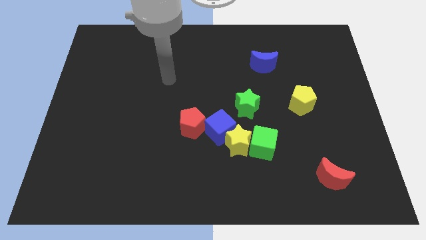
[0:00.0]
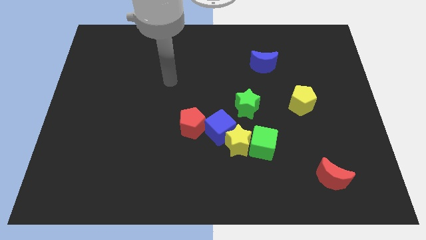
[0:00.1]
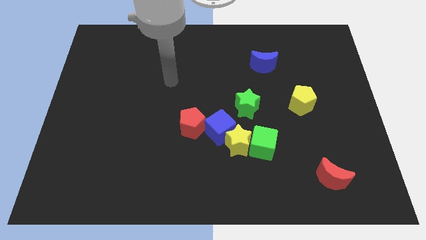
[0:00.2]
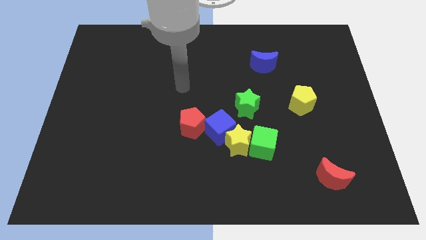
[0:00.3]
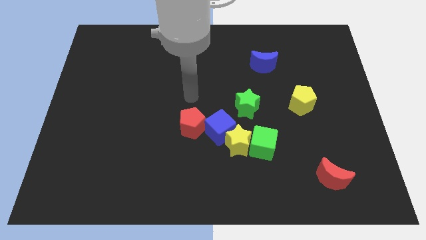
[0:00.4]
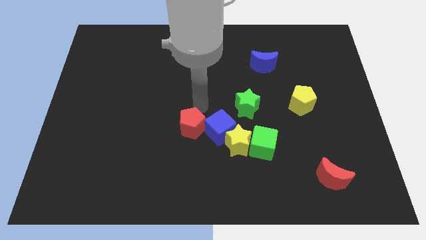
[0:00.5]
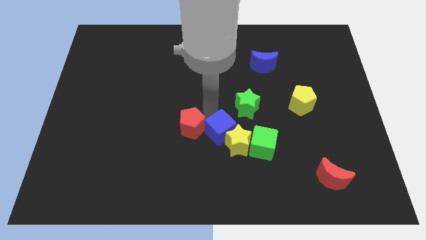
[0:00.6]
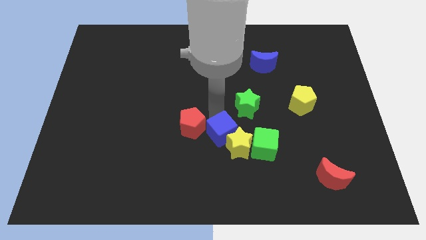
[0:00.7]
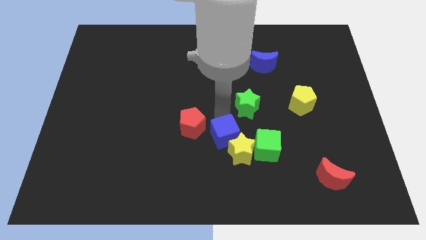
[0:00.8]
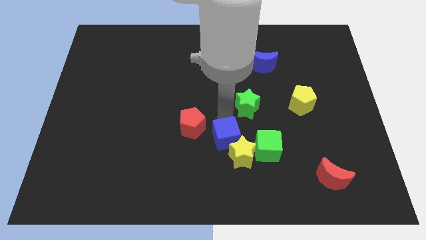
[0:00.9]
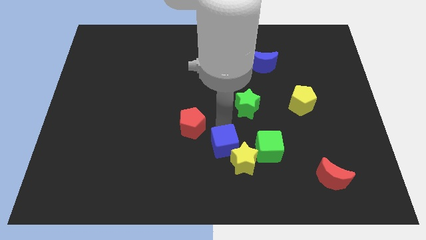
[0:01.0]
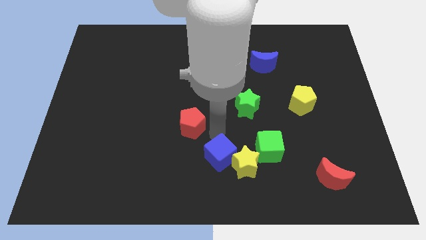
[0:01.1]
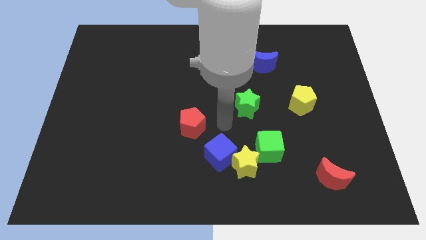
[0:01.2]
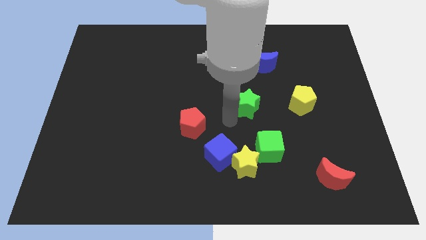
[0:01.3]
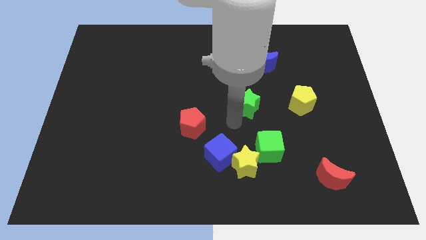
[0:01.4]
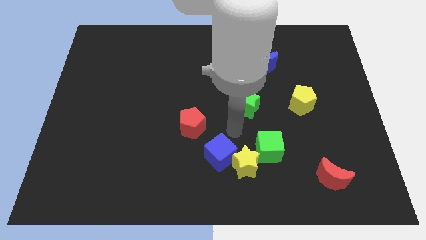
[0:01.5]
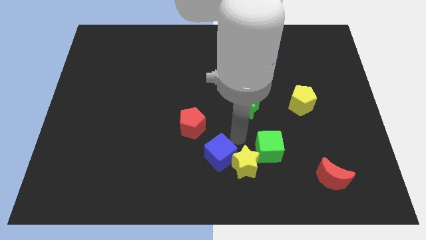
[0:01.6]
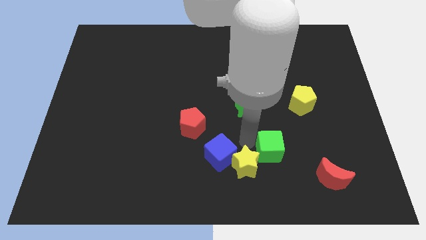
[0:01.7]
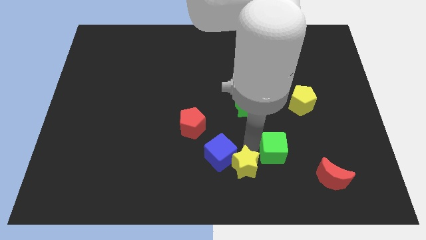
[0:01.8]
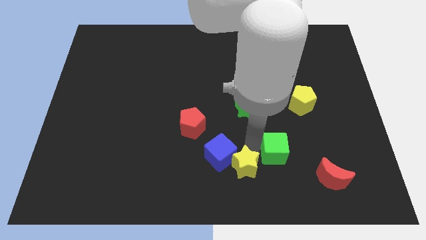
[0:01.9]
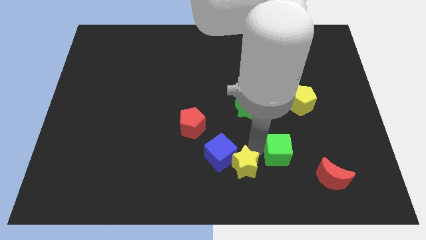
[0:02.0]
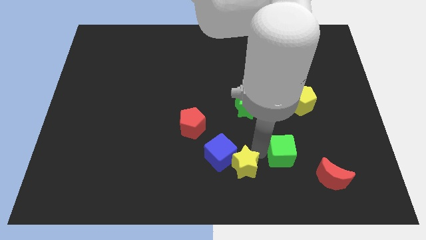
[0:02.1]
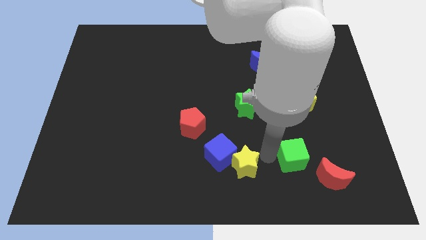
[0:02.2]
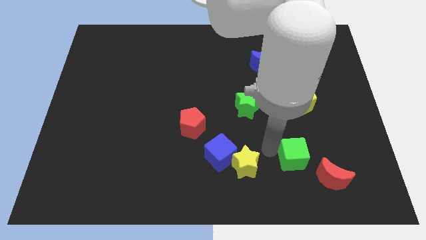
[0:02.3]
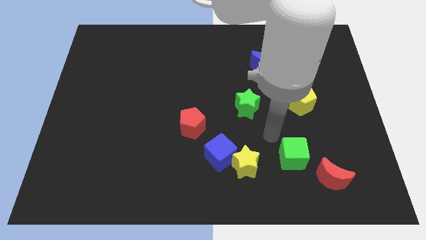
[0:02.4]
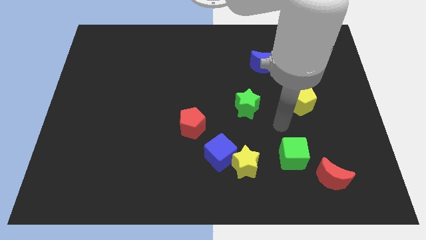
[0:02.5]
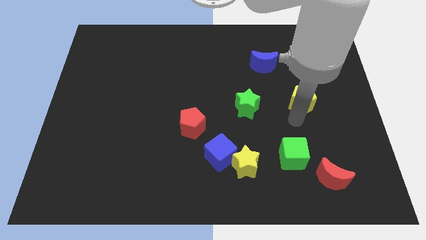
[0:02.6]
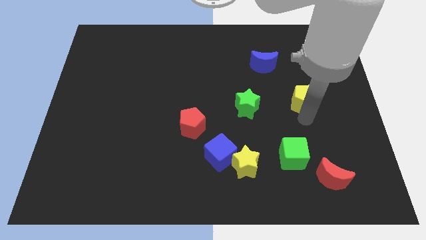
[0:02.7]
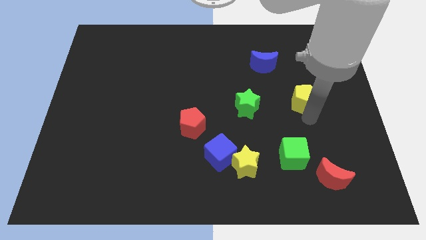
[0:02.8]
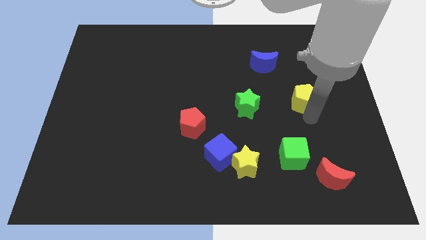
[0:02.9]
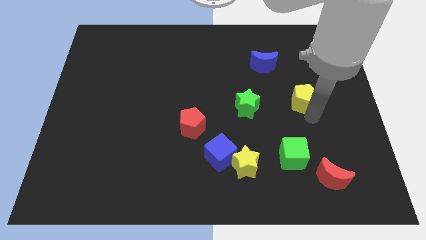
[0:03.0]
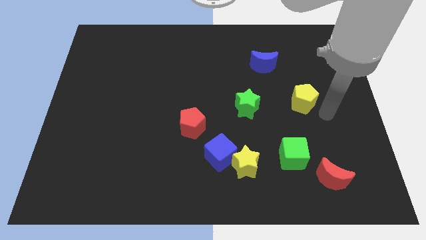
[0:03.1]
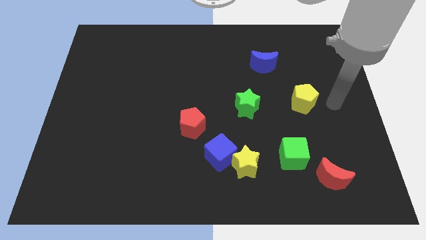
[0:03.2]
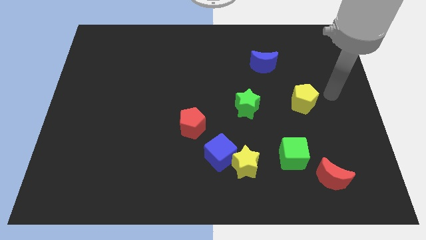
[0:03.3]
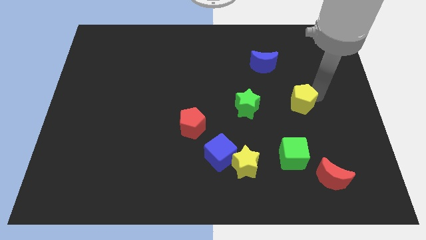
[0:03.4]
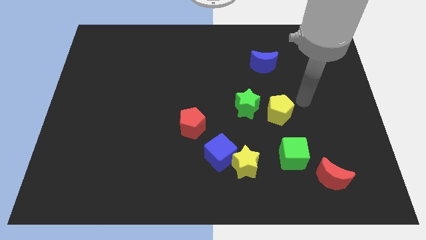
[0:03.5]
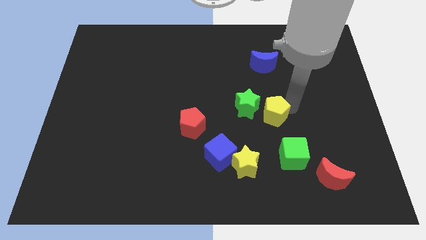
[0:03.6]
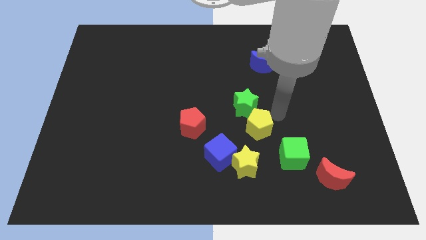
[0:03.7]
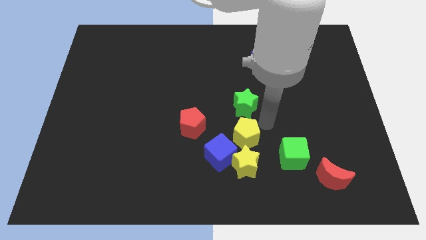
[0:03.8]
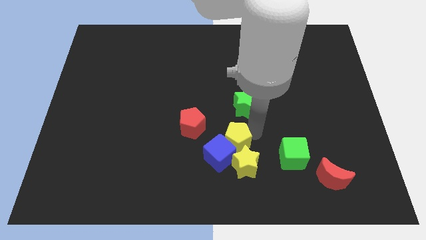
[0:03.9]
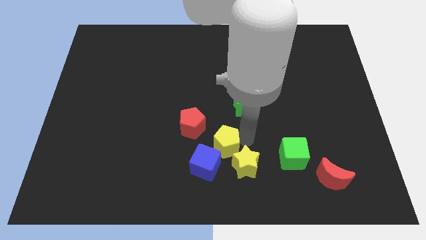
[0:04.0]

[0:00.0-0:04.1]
slide the yellow pentagon into the blue cube

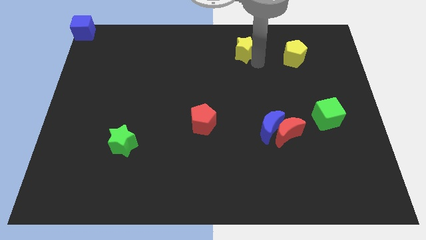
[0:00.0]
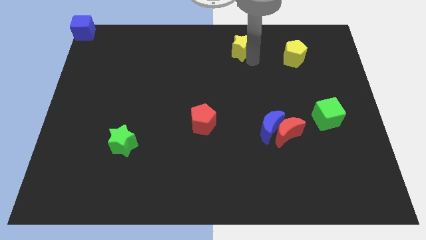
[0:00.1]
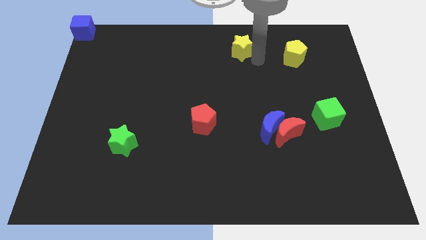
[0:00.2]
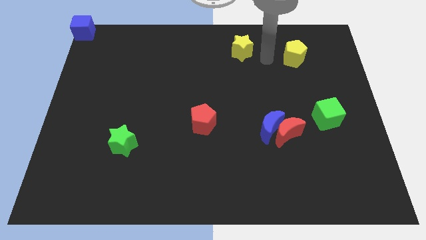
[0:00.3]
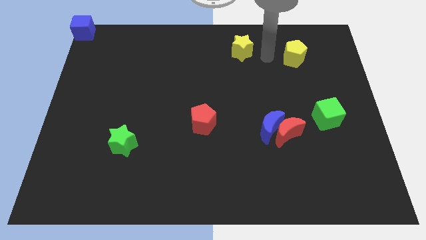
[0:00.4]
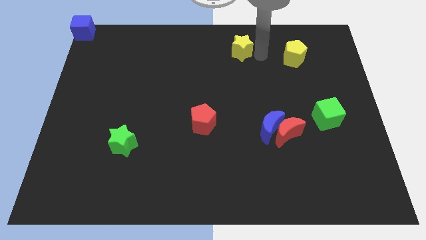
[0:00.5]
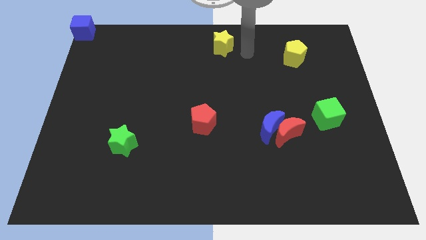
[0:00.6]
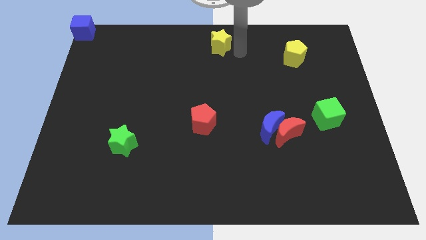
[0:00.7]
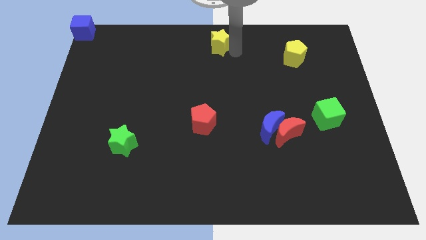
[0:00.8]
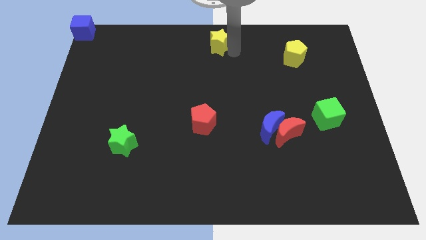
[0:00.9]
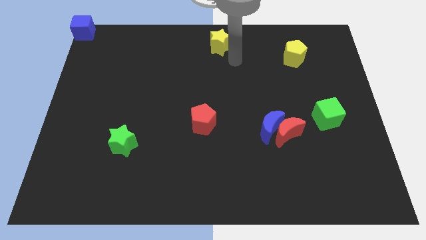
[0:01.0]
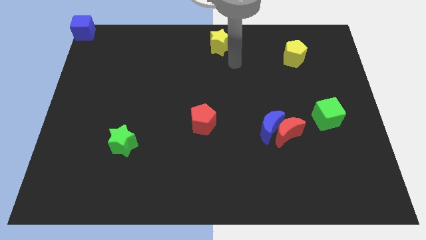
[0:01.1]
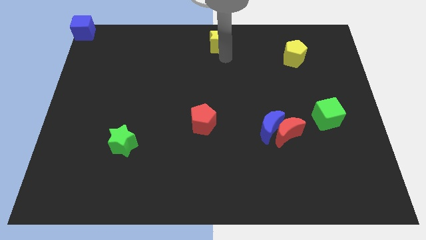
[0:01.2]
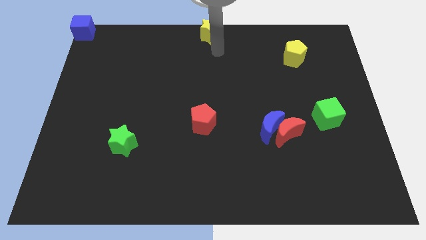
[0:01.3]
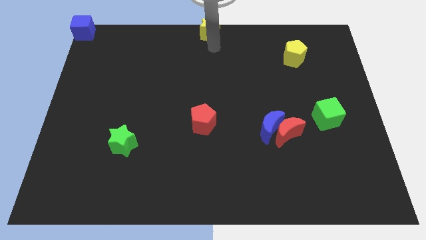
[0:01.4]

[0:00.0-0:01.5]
put the yellow star at the top center

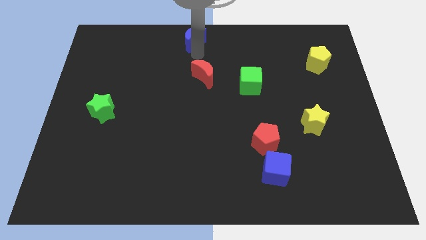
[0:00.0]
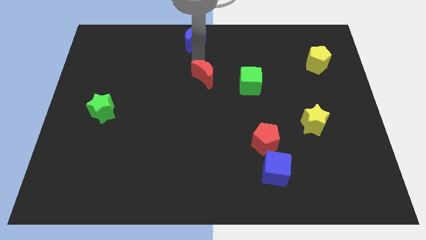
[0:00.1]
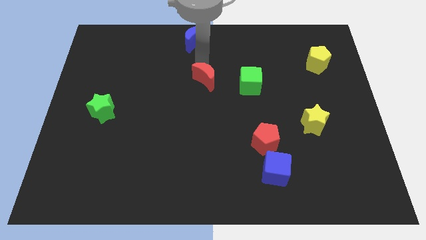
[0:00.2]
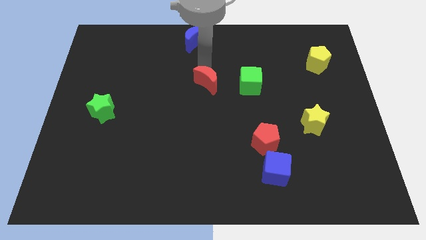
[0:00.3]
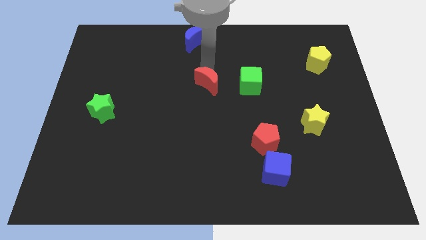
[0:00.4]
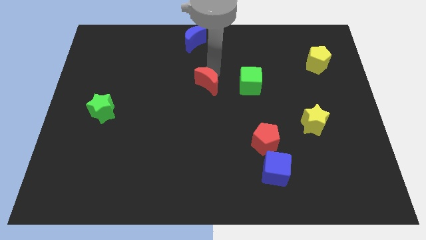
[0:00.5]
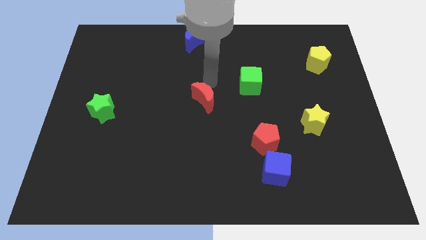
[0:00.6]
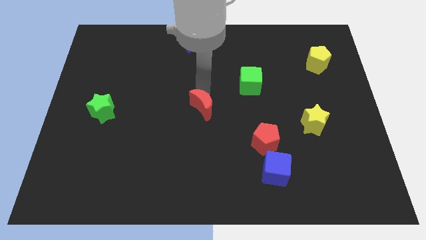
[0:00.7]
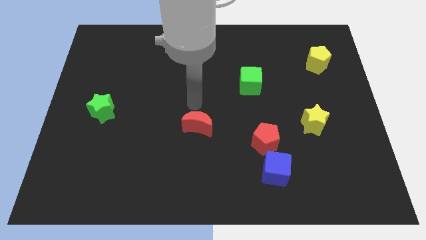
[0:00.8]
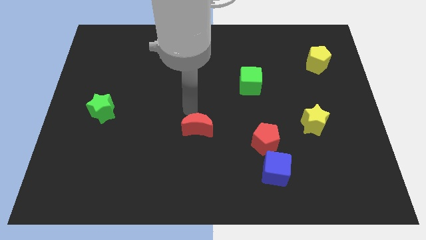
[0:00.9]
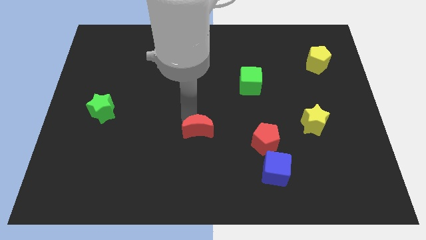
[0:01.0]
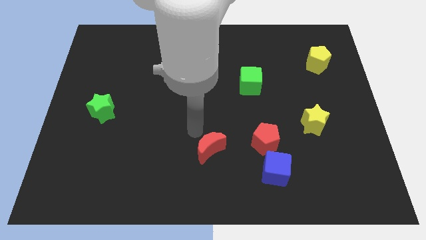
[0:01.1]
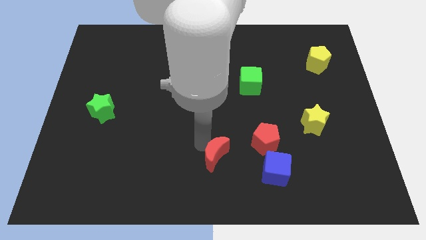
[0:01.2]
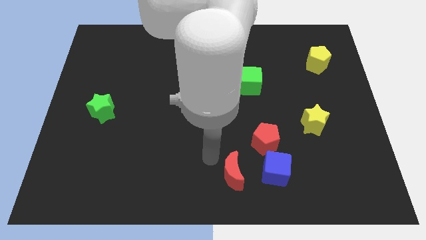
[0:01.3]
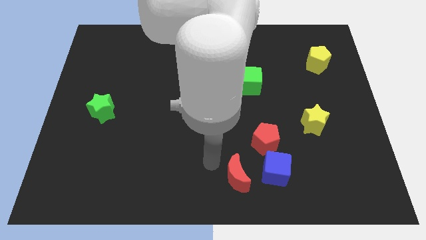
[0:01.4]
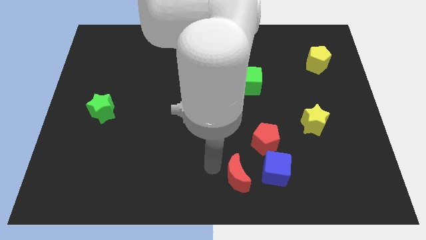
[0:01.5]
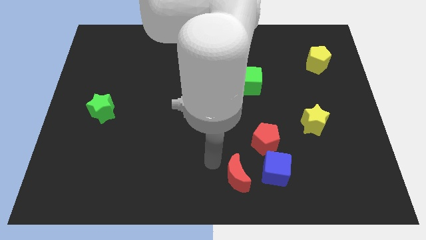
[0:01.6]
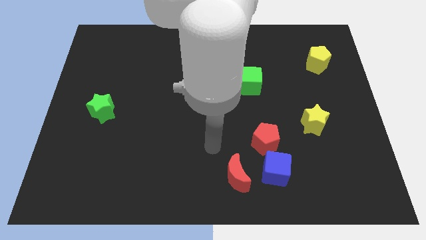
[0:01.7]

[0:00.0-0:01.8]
push the red crecent to the left side of the blue cube

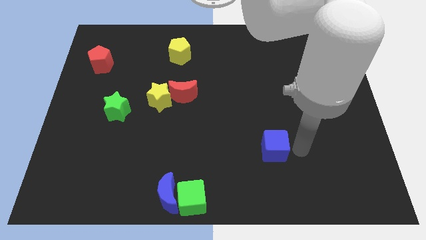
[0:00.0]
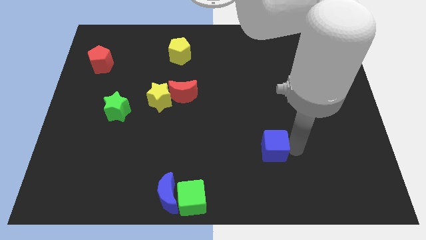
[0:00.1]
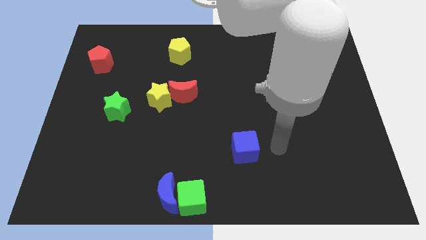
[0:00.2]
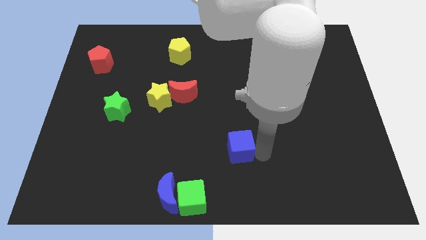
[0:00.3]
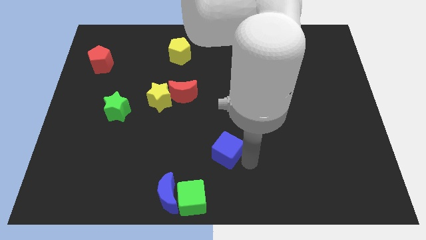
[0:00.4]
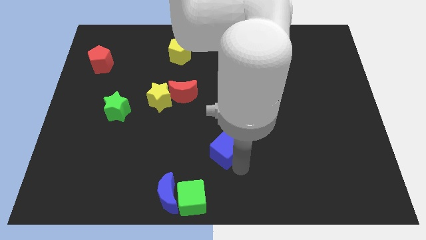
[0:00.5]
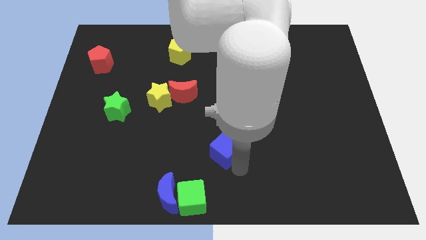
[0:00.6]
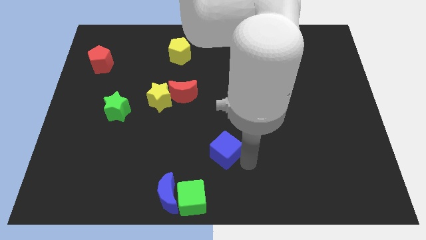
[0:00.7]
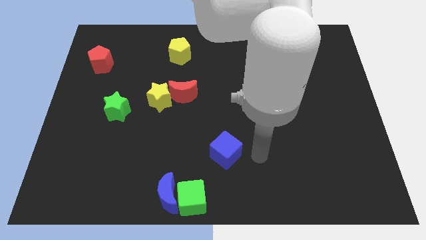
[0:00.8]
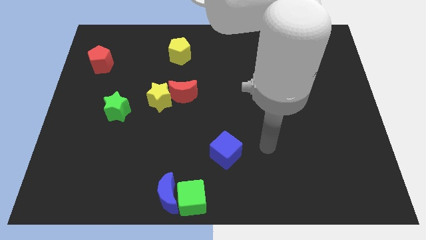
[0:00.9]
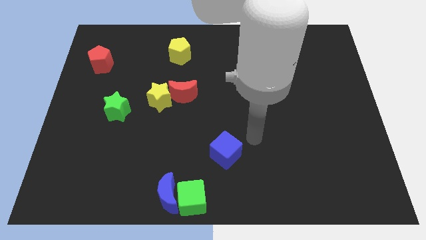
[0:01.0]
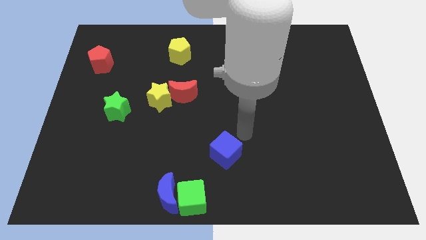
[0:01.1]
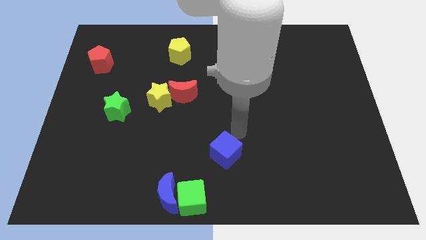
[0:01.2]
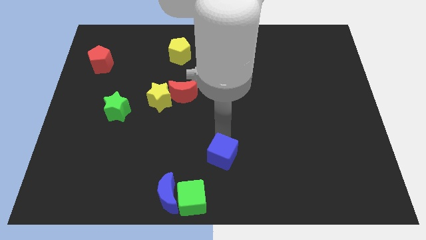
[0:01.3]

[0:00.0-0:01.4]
drag the blue cube to the top right side of the green cube

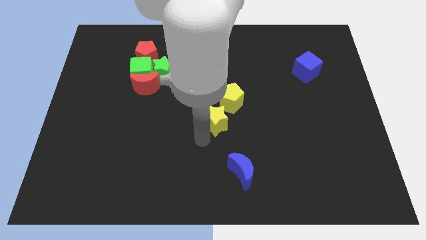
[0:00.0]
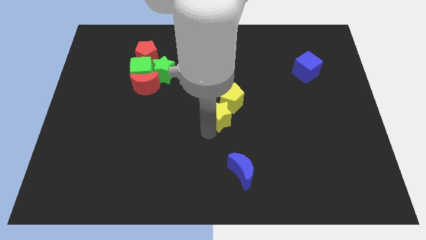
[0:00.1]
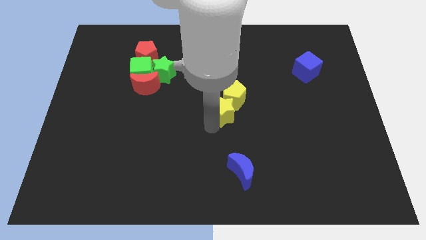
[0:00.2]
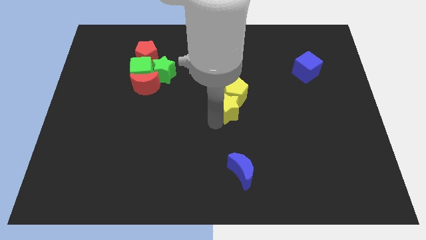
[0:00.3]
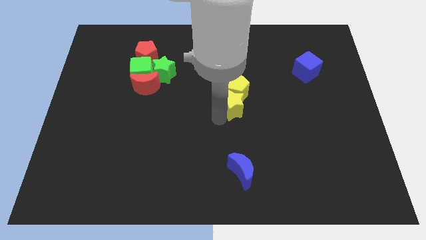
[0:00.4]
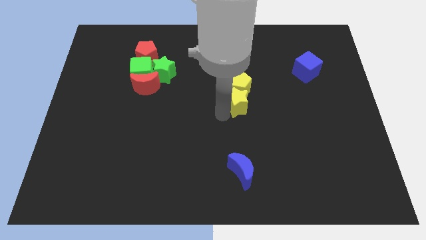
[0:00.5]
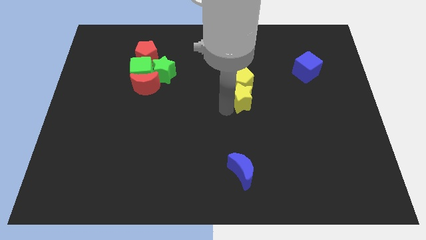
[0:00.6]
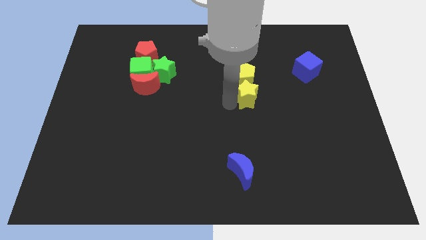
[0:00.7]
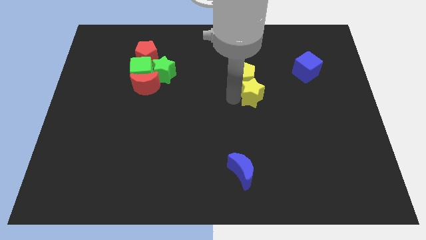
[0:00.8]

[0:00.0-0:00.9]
move the yellow blocks to the center
